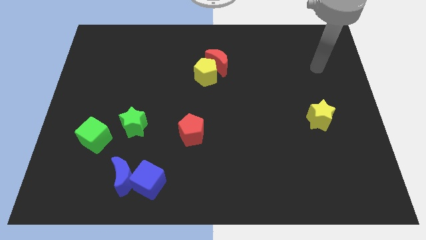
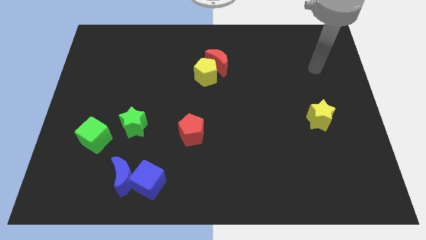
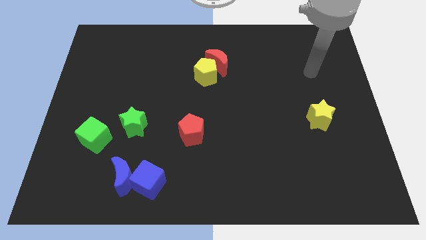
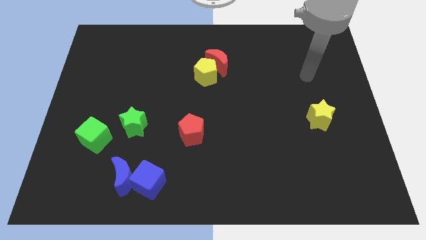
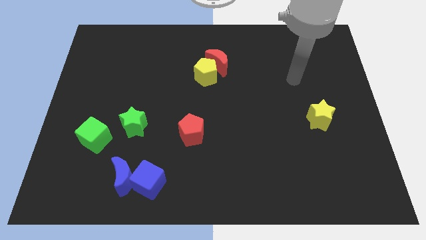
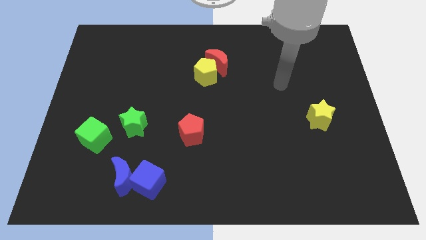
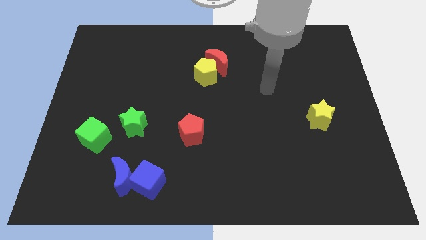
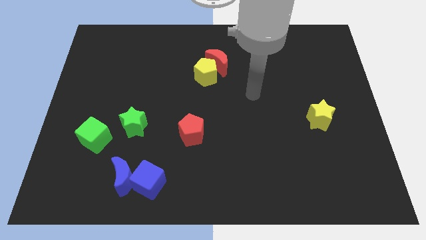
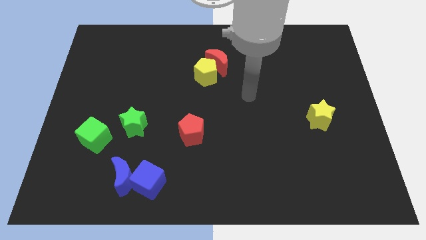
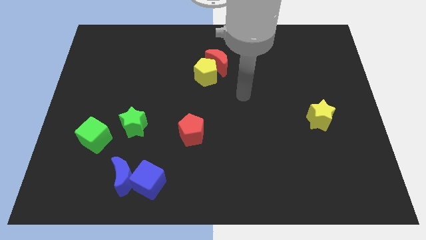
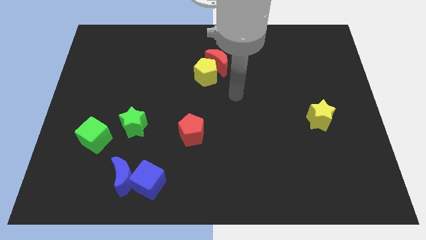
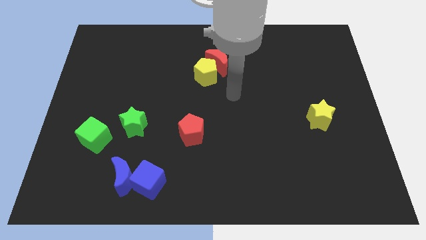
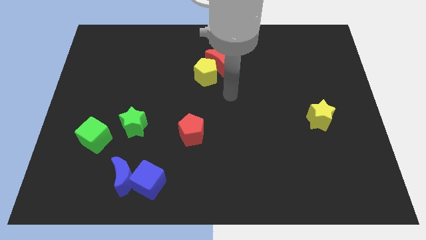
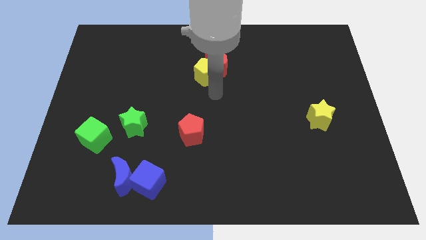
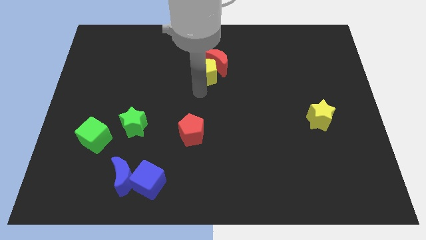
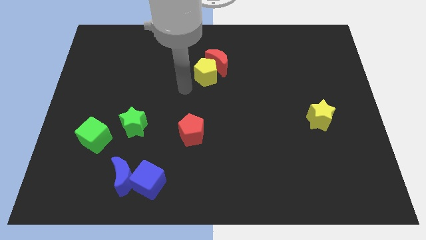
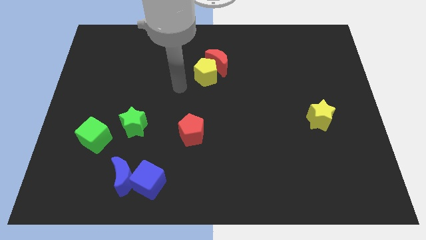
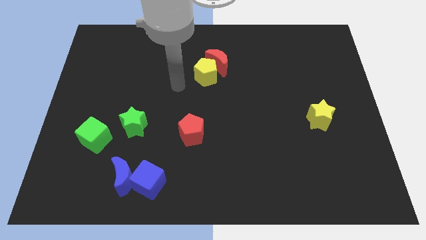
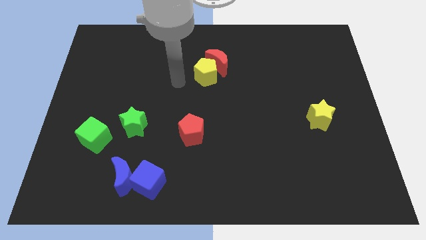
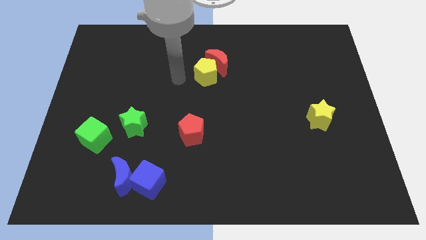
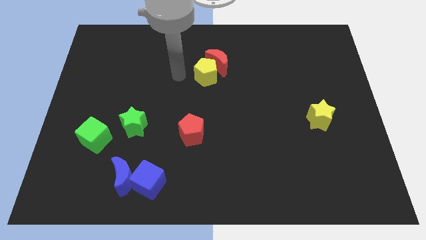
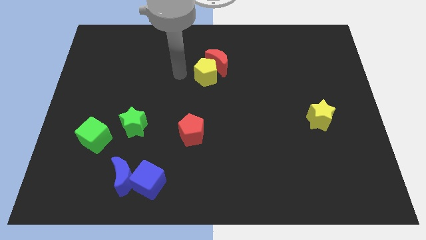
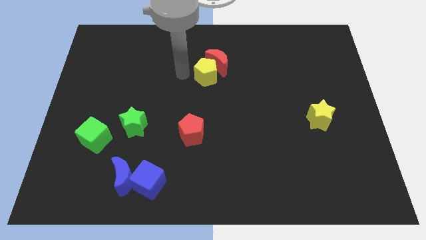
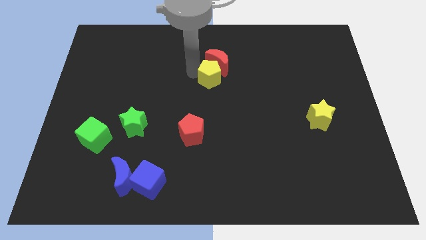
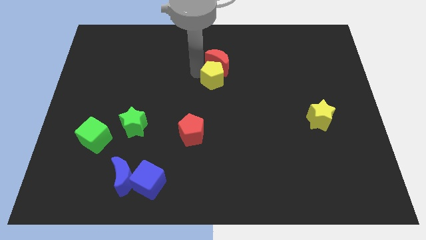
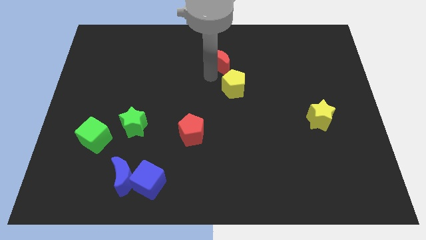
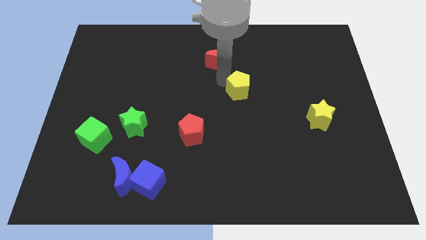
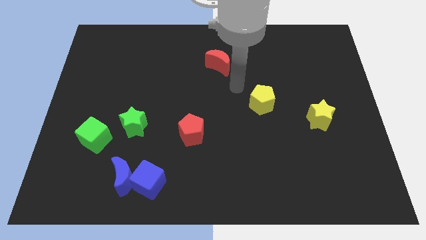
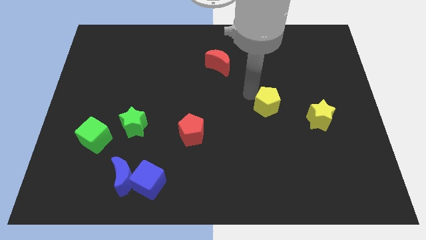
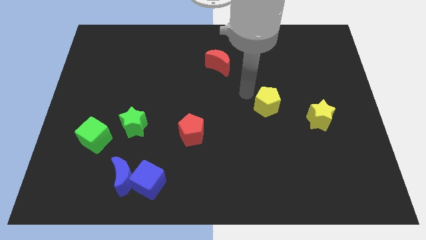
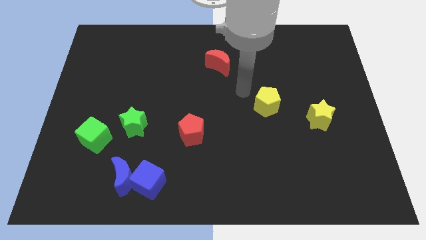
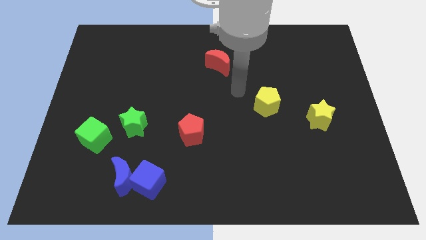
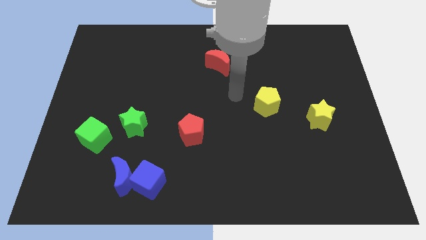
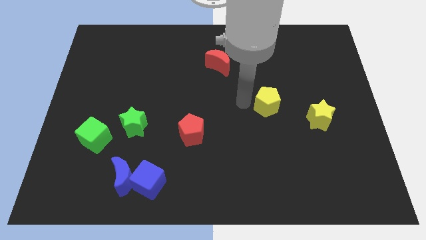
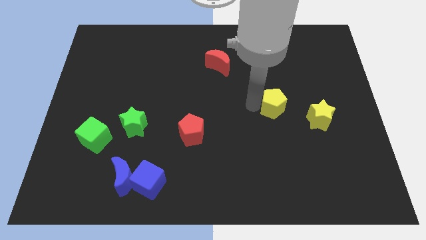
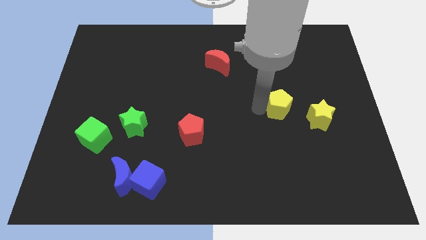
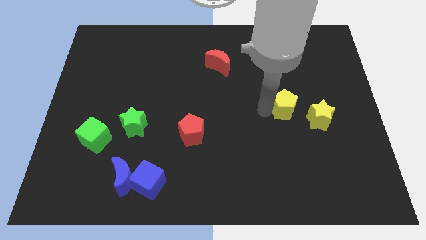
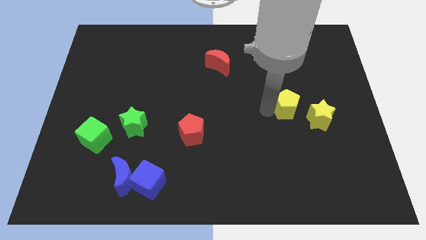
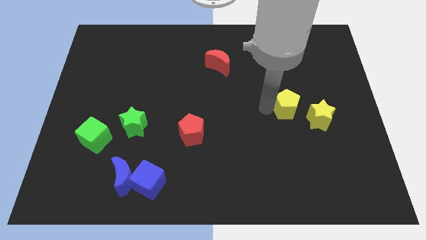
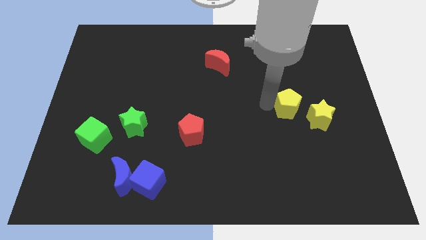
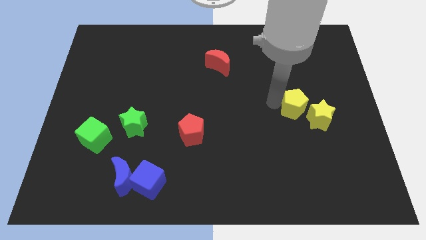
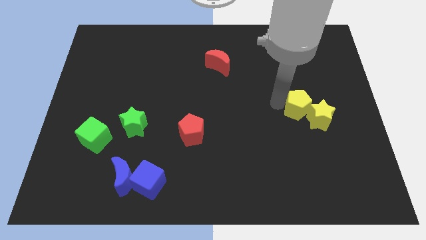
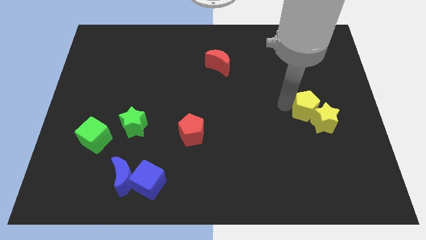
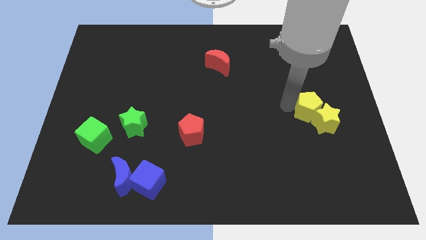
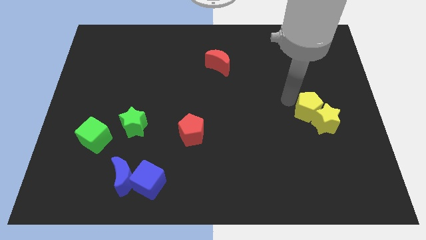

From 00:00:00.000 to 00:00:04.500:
move yellow pentagon into yellow star

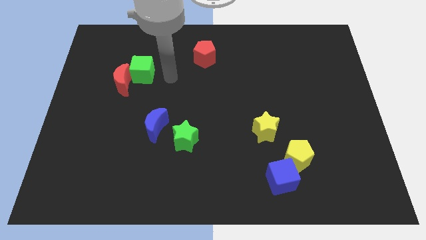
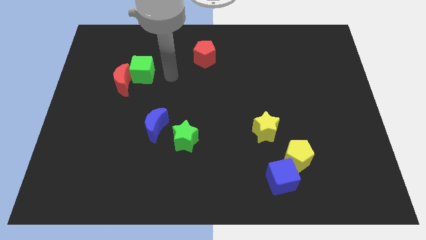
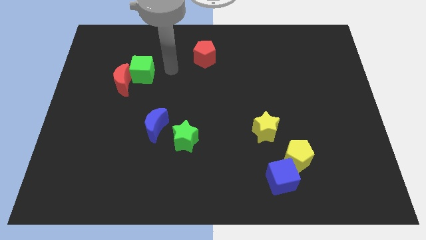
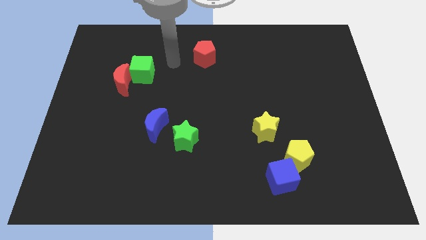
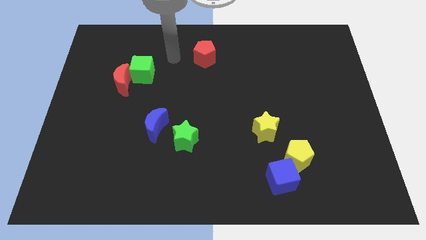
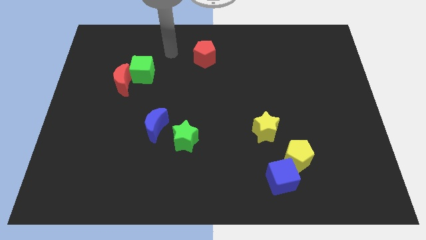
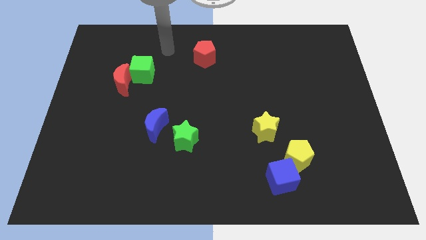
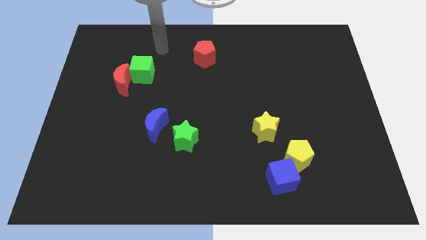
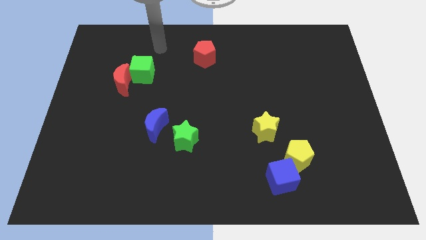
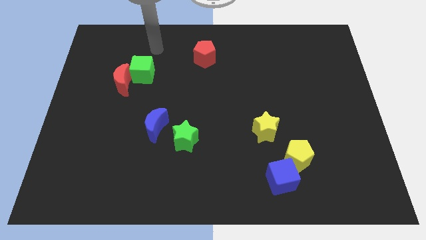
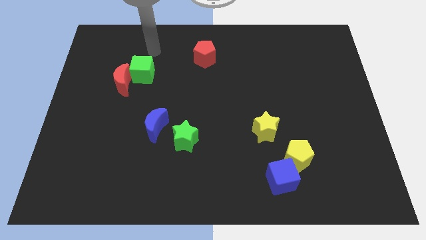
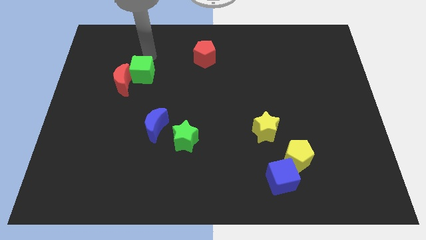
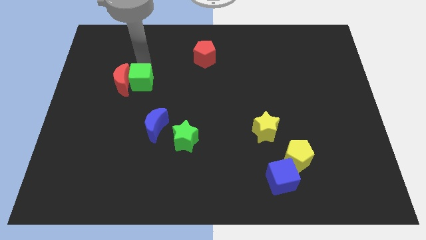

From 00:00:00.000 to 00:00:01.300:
push the green cube slightly to the bottom

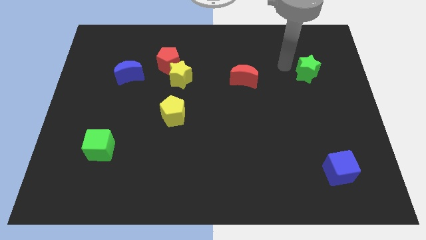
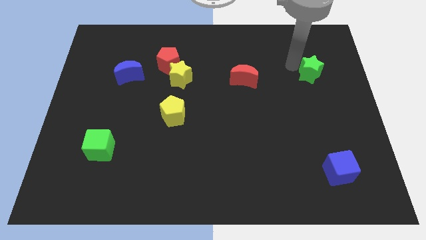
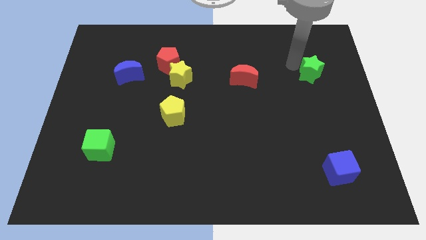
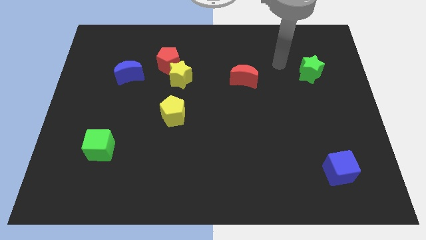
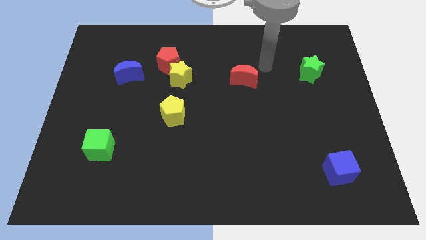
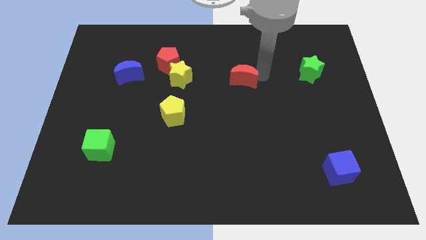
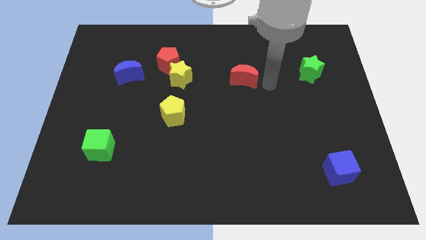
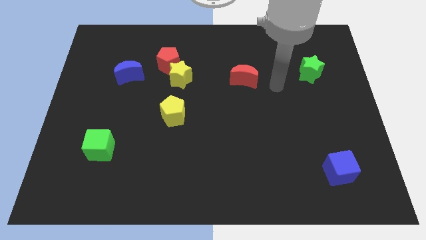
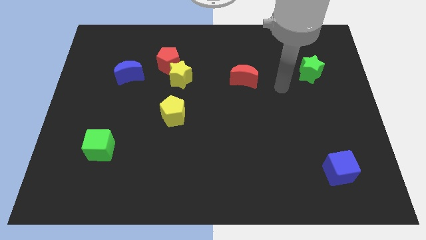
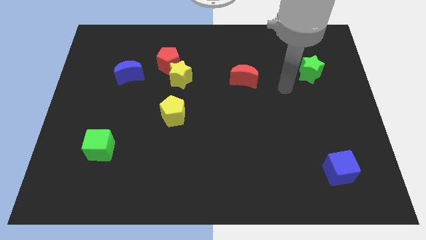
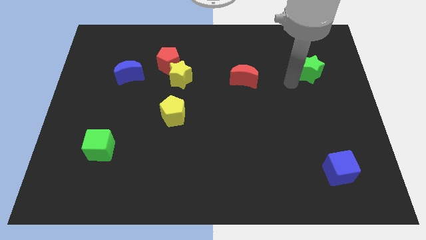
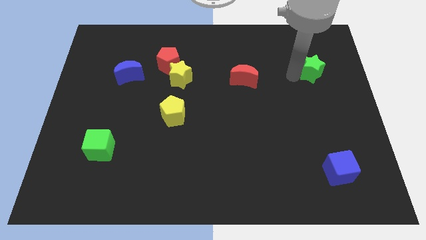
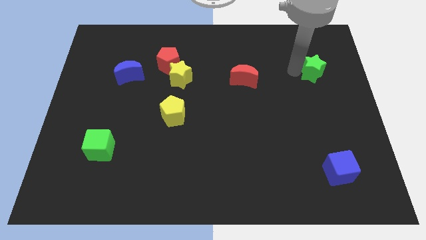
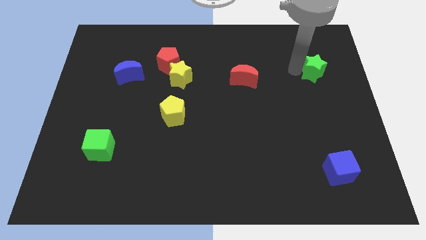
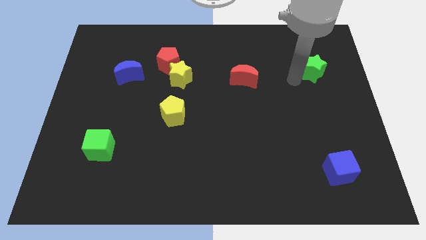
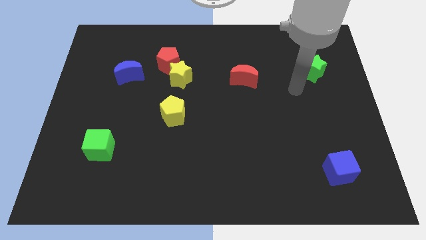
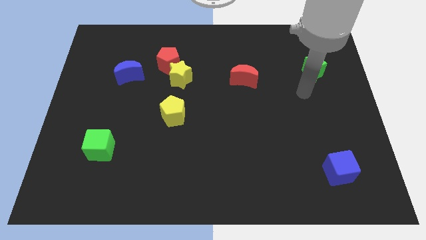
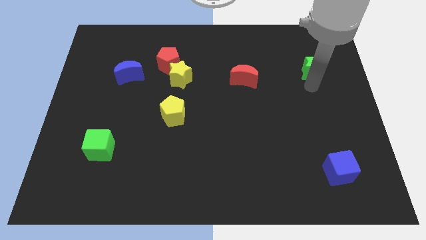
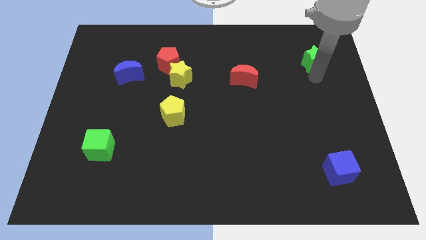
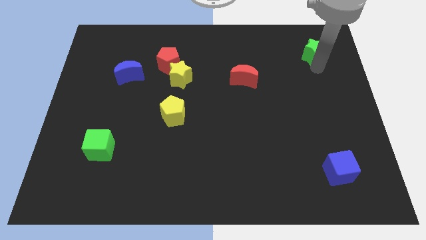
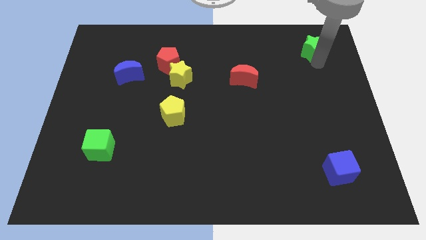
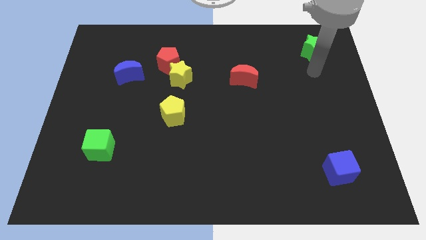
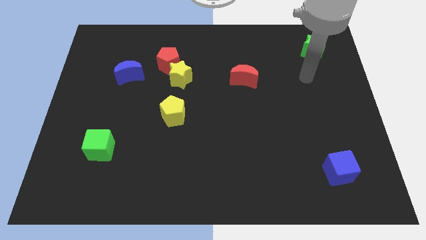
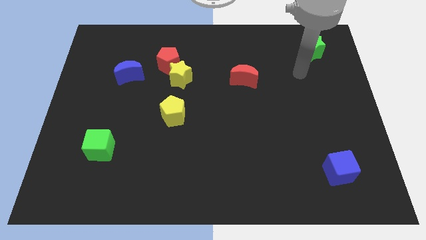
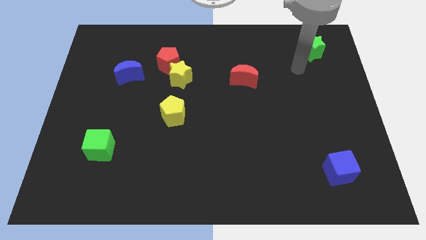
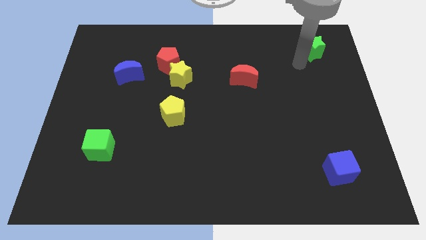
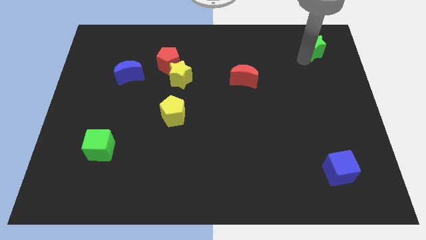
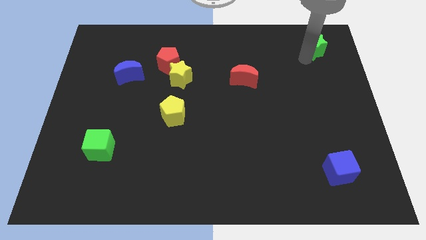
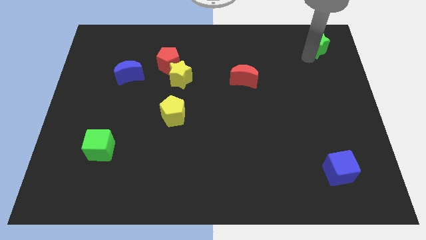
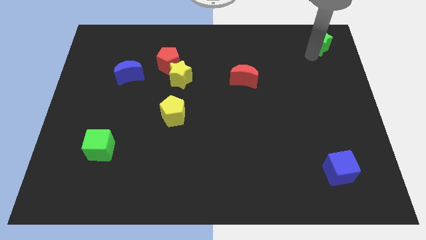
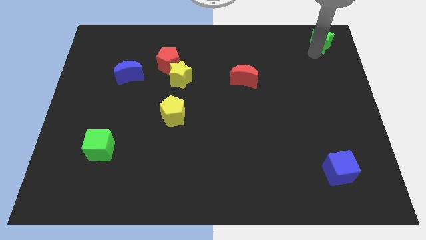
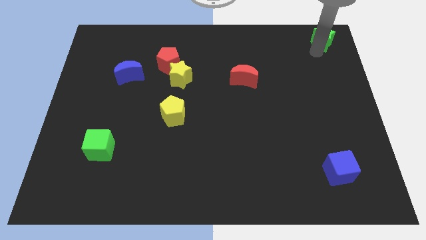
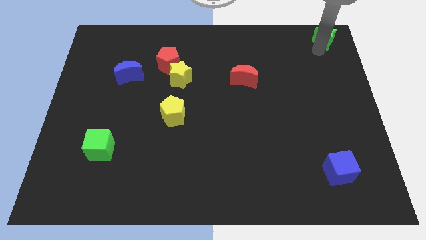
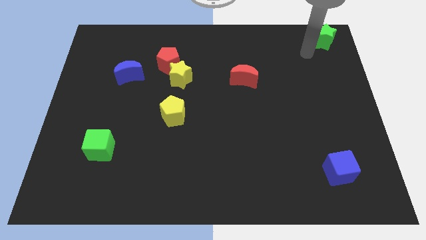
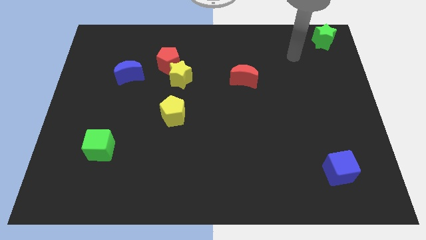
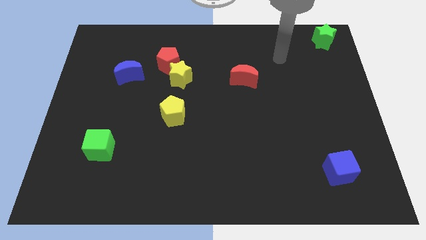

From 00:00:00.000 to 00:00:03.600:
move the green star to the top side of the table
